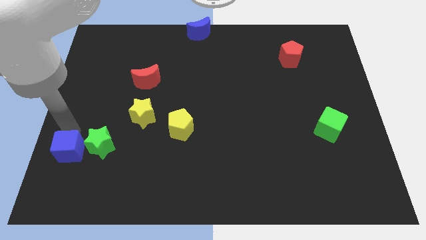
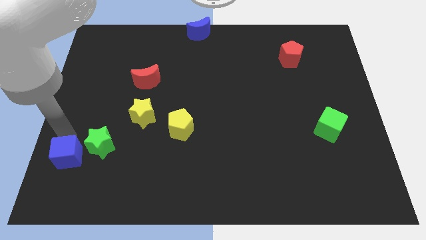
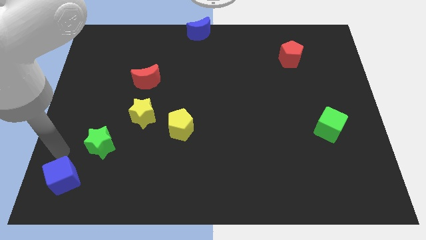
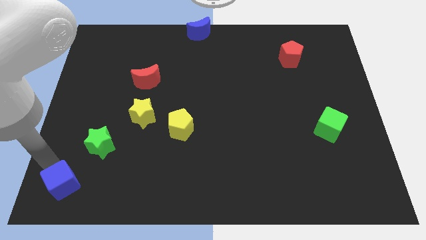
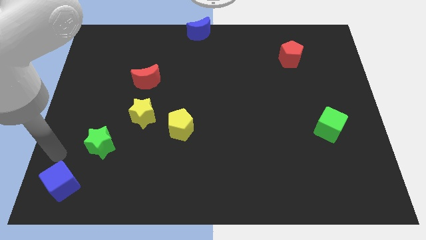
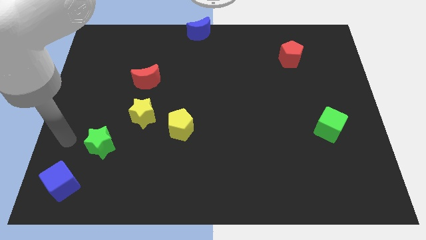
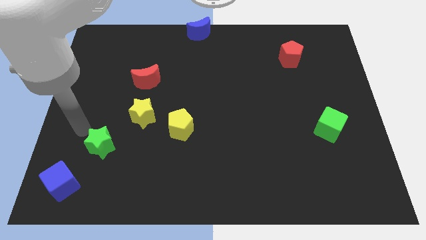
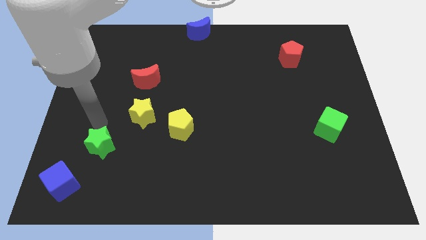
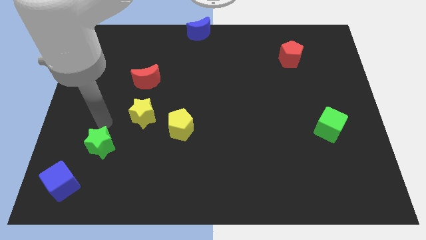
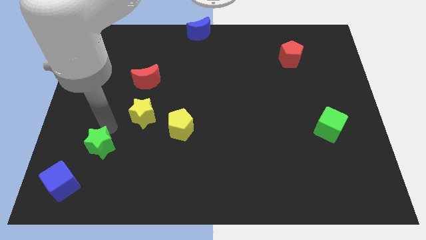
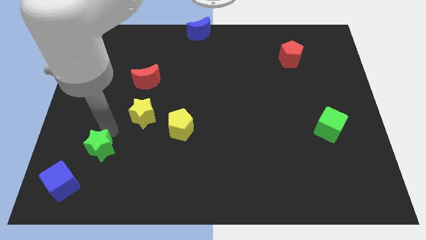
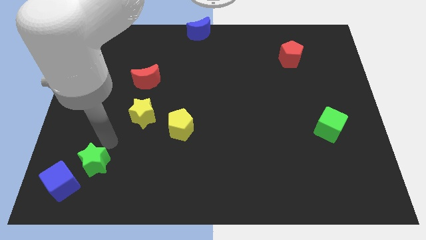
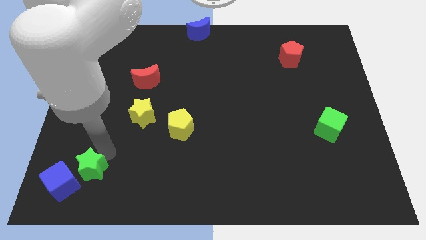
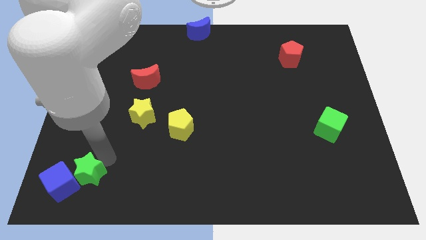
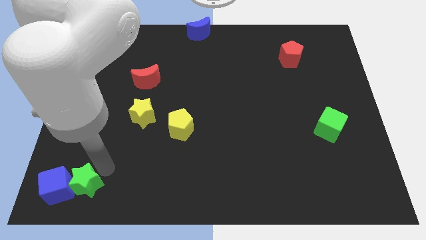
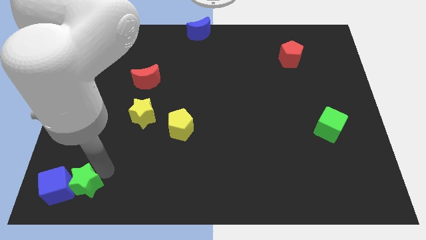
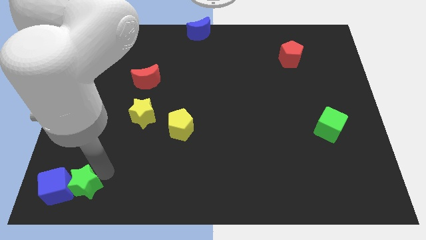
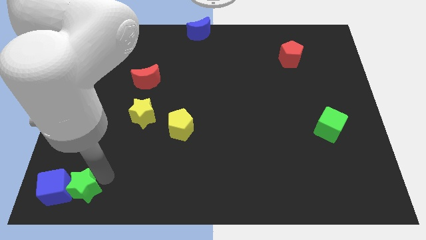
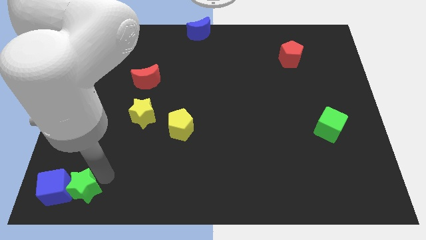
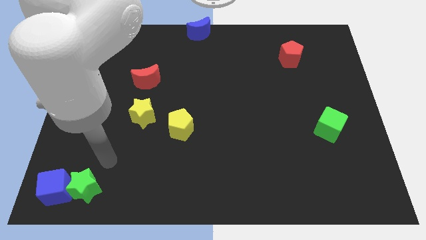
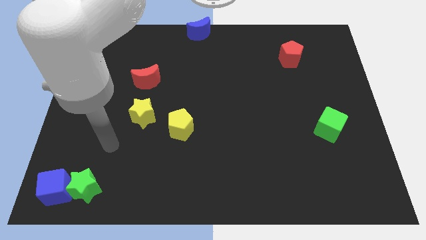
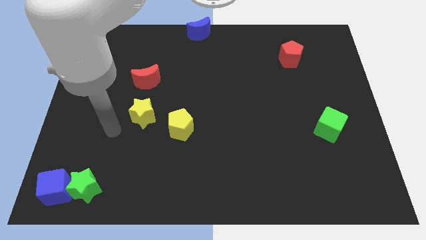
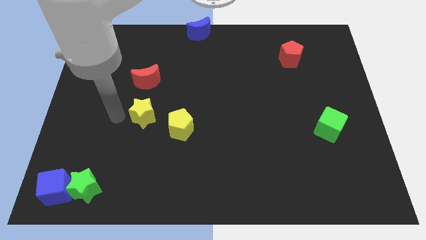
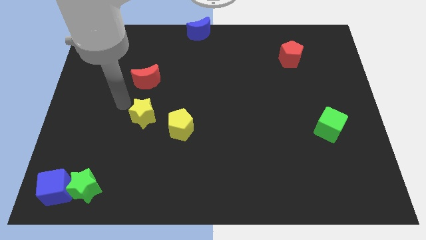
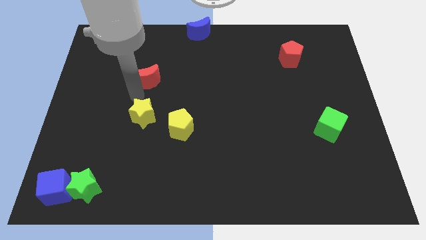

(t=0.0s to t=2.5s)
move the blue cube and the green star slightly to the bottom

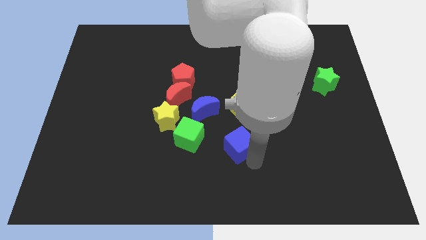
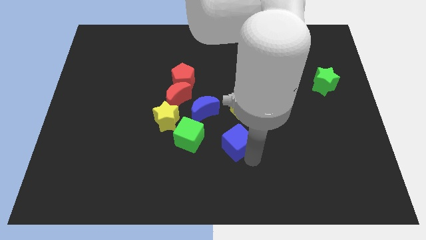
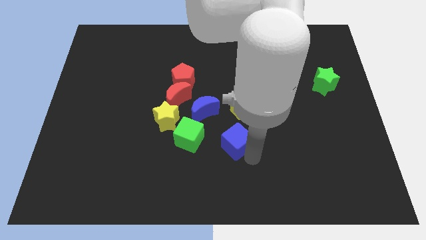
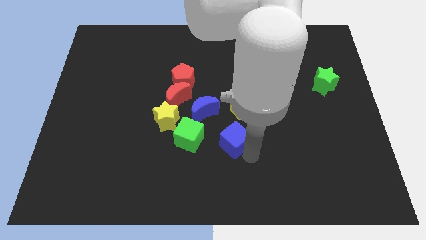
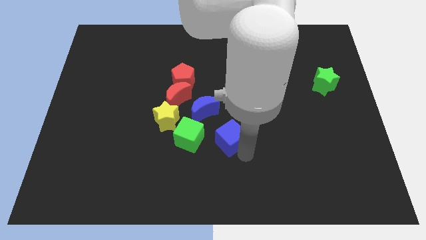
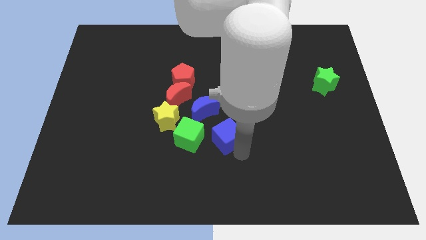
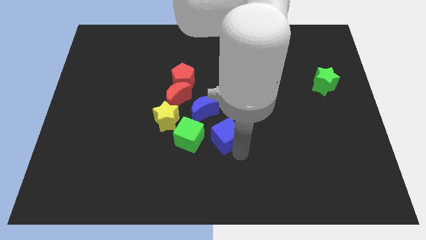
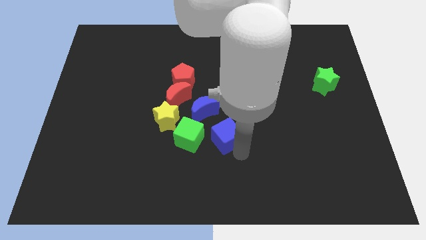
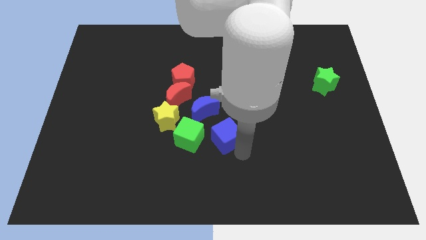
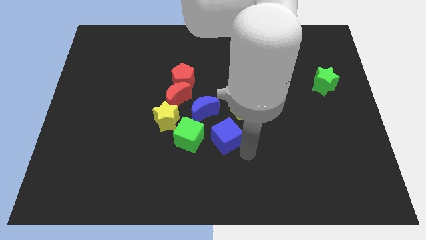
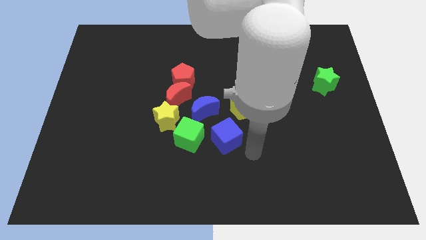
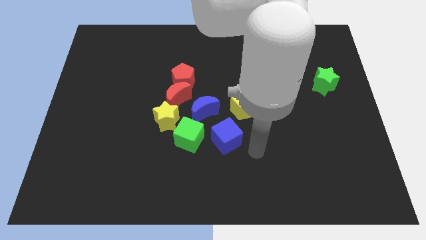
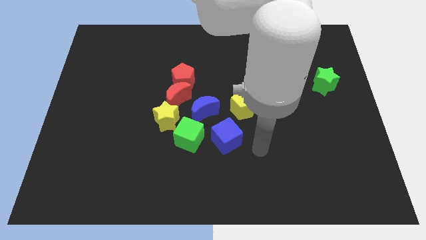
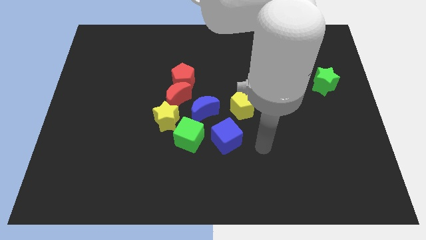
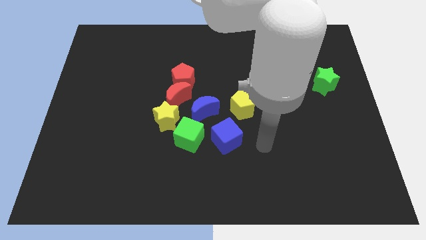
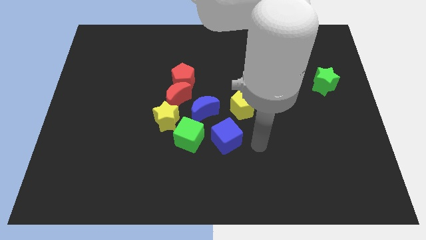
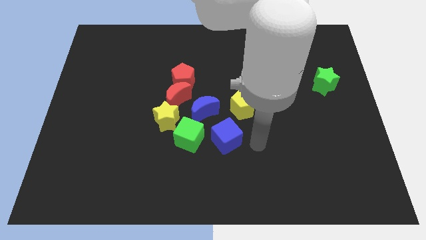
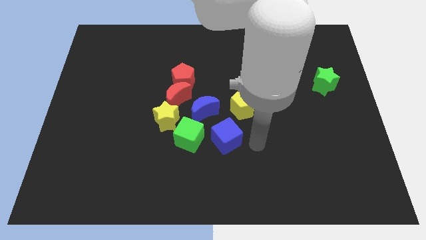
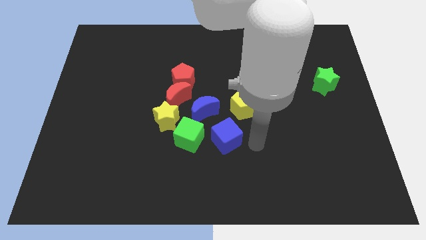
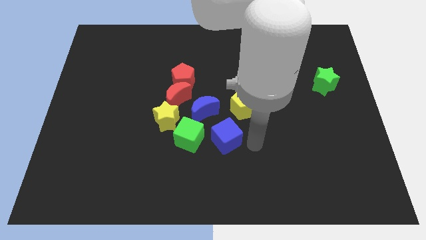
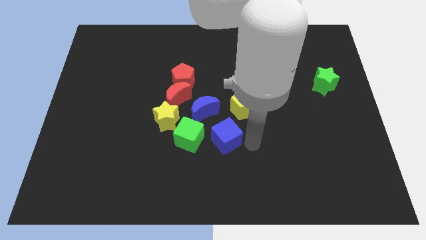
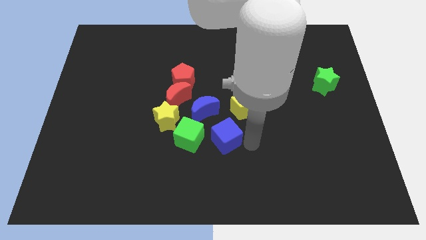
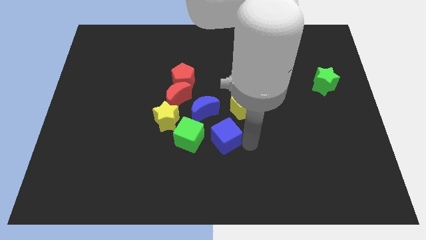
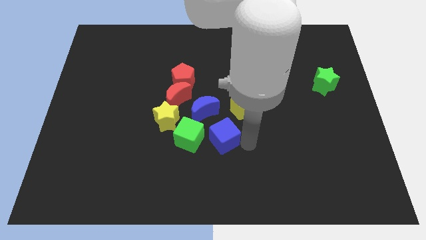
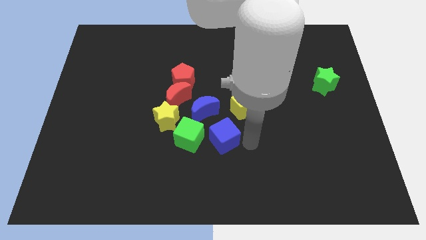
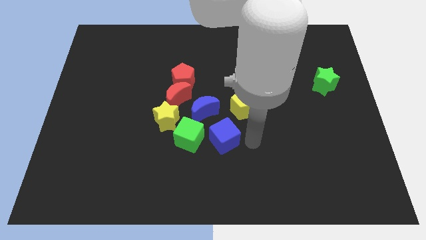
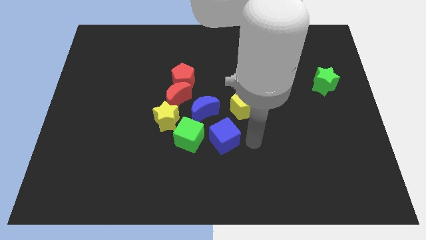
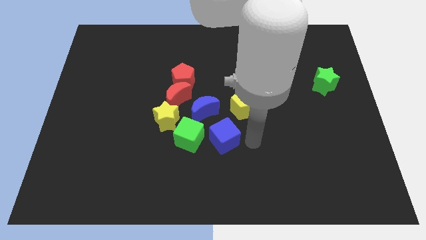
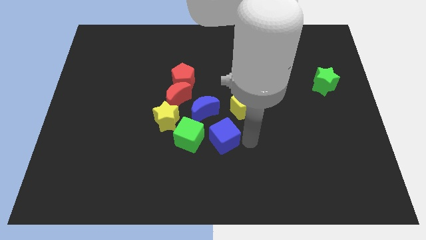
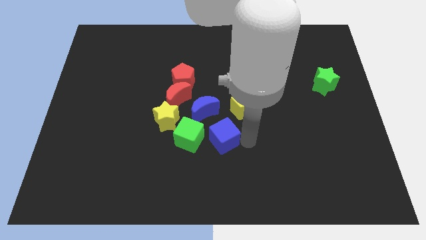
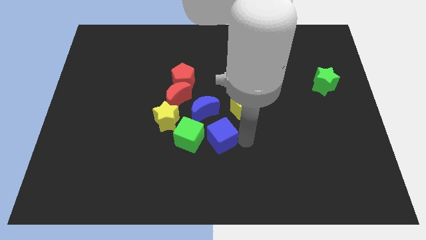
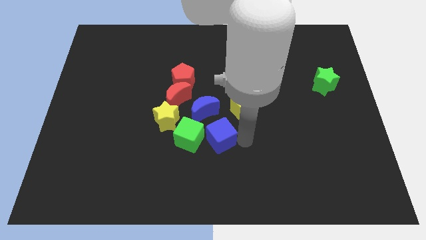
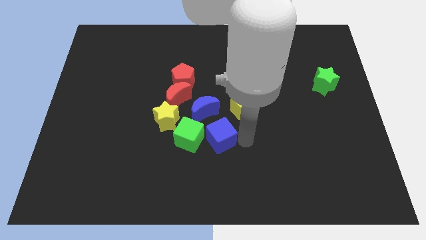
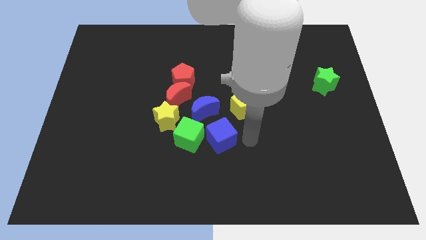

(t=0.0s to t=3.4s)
push the blue cube close to the right side to green cube

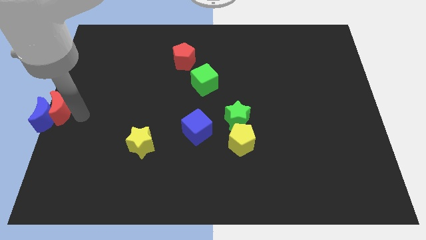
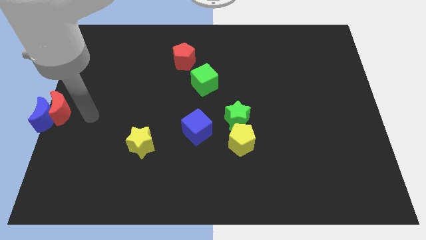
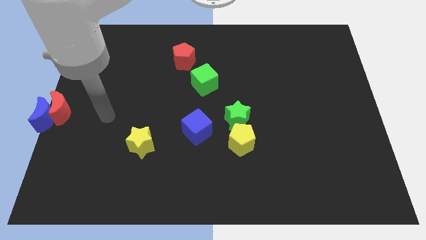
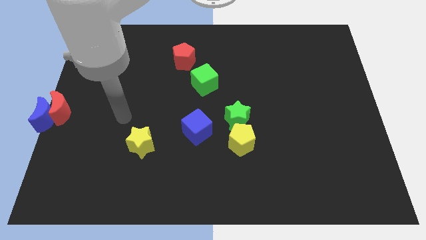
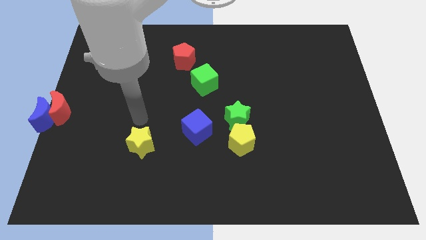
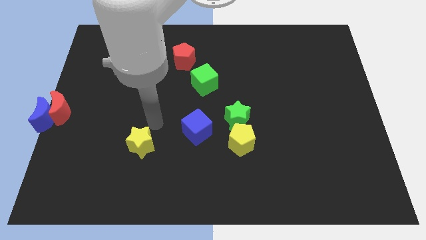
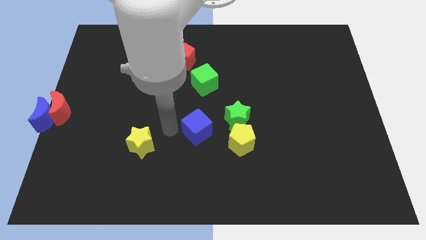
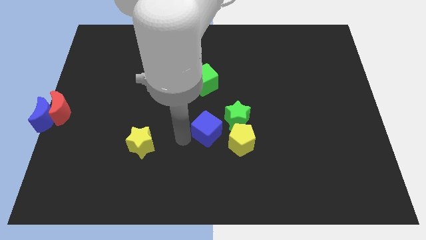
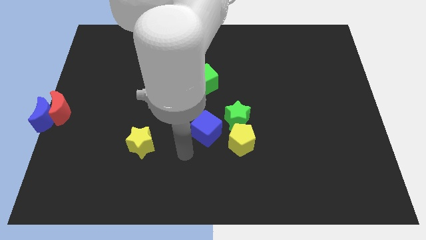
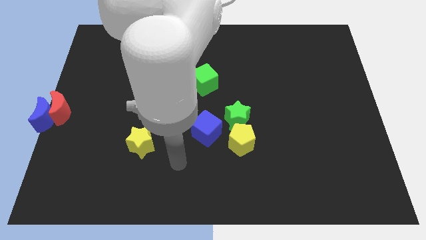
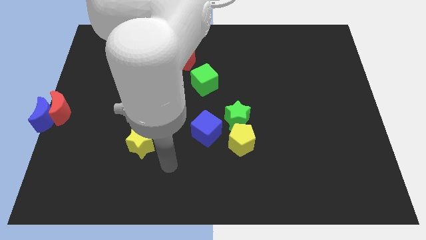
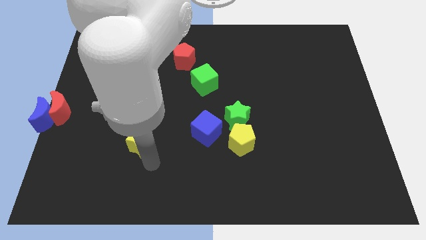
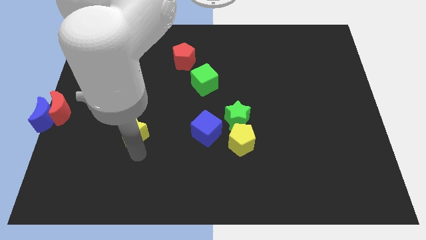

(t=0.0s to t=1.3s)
move the arm to the bottom side of the yellow star

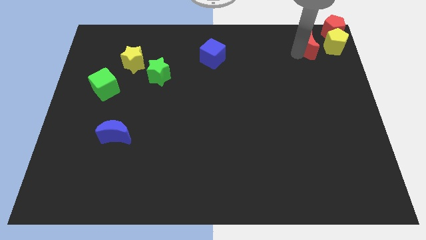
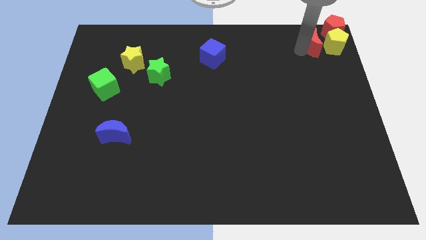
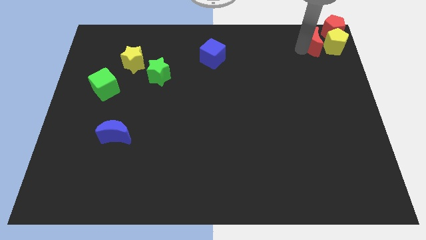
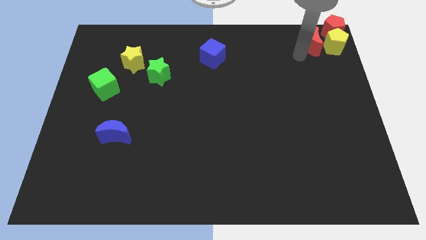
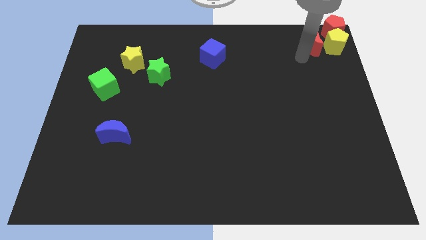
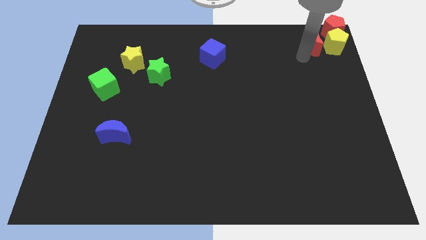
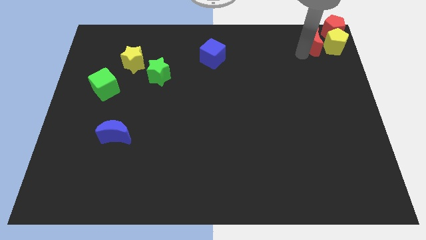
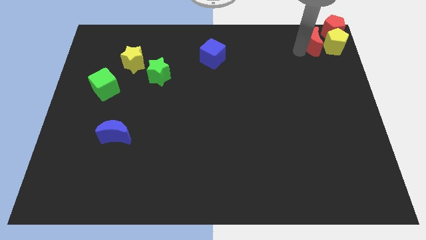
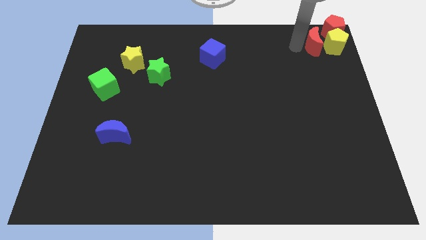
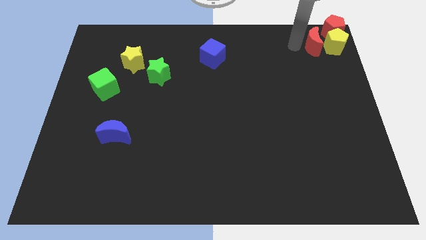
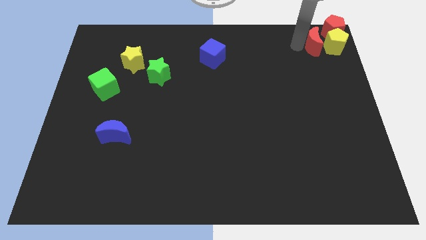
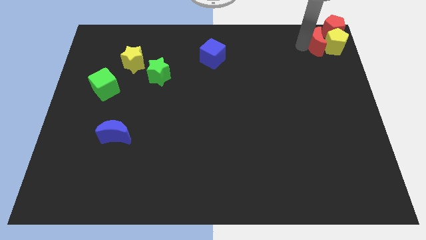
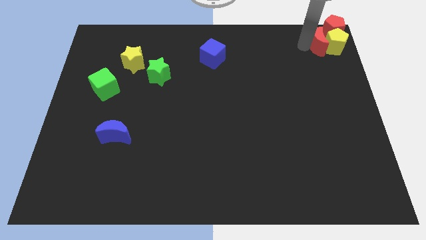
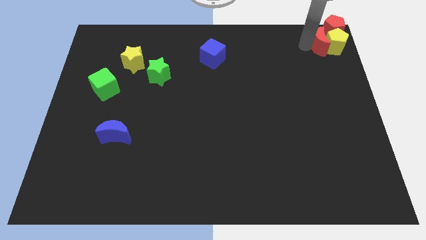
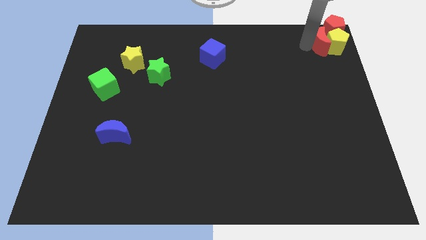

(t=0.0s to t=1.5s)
push the red crescent to the left of the yellow pentagon

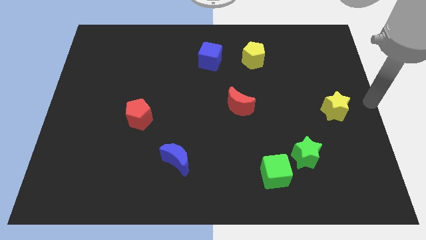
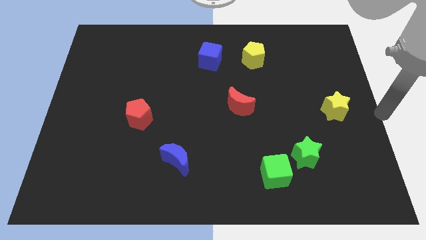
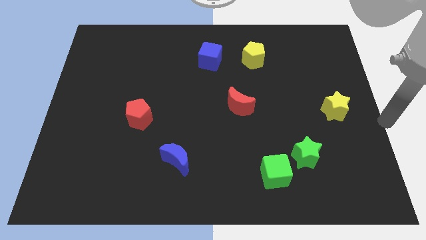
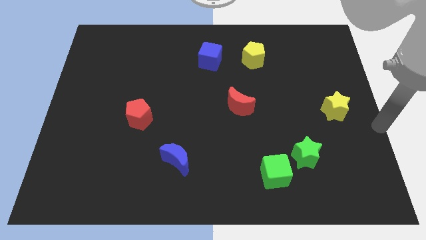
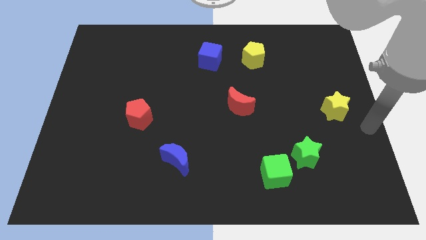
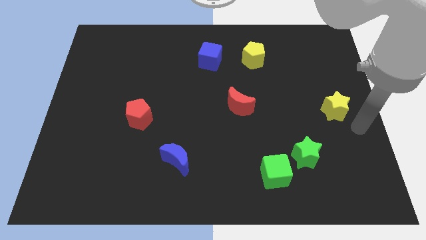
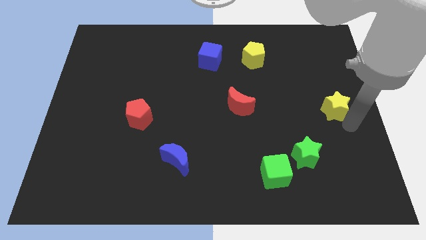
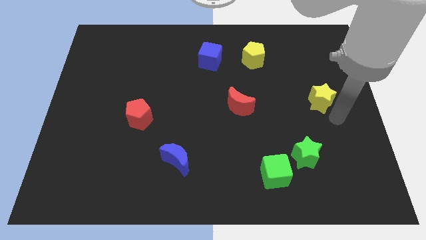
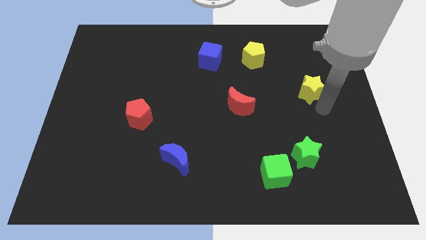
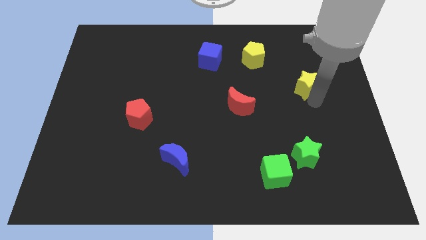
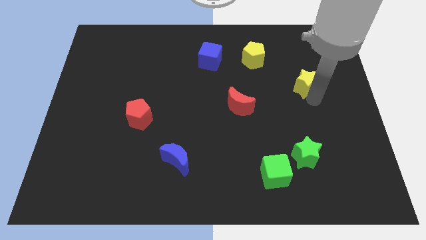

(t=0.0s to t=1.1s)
slide the yellow star up slightly
